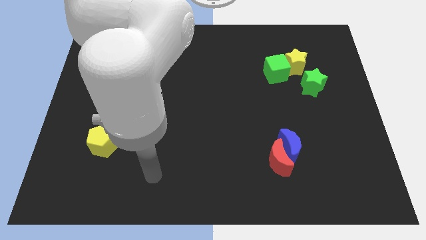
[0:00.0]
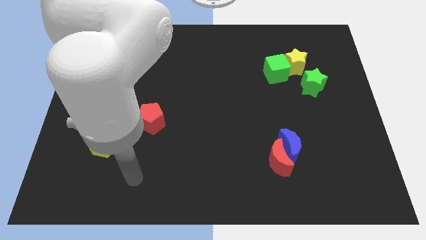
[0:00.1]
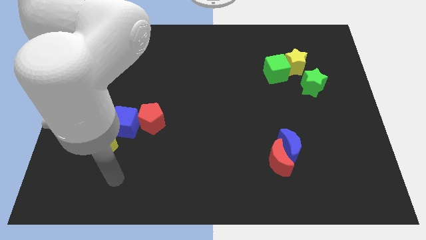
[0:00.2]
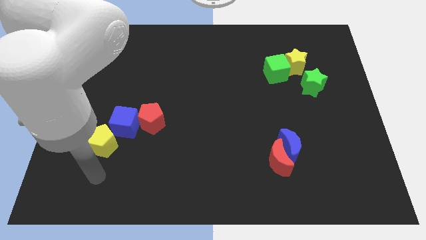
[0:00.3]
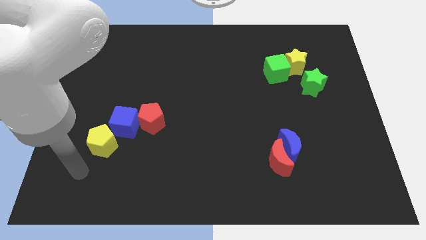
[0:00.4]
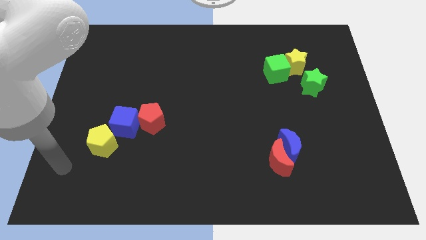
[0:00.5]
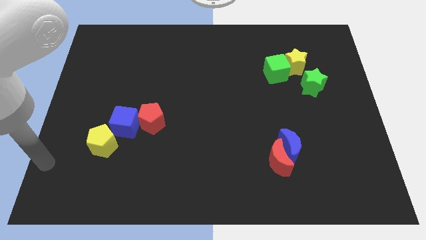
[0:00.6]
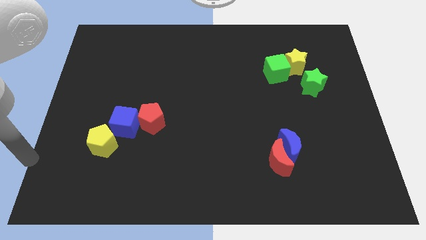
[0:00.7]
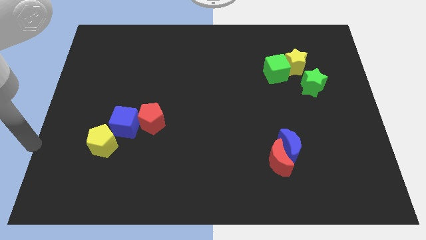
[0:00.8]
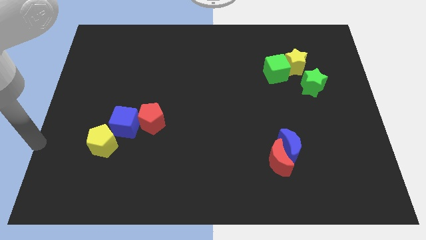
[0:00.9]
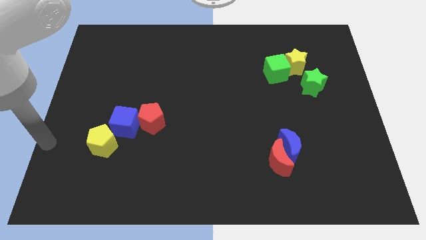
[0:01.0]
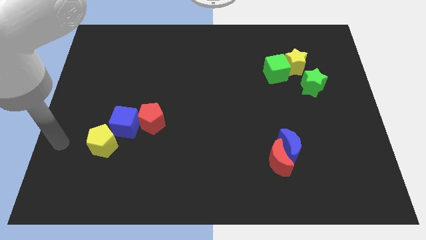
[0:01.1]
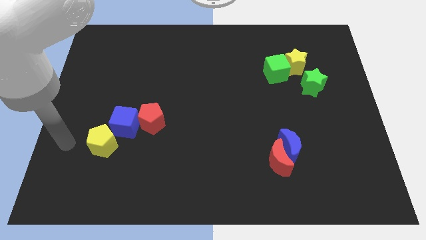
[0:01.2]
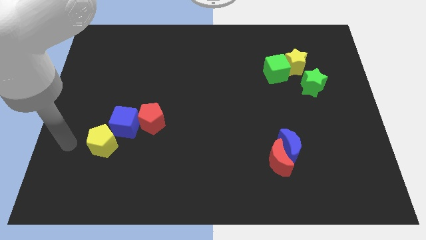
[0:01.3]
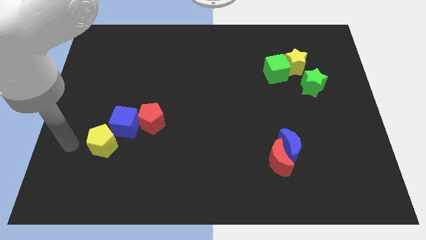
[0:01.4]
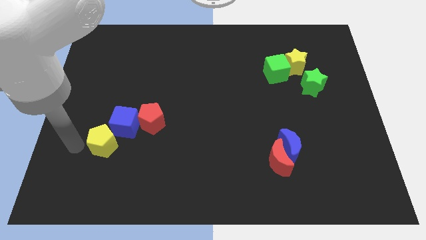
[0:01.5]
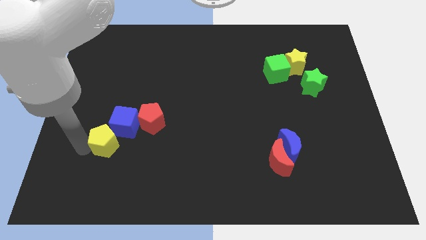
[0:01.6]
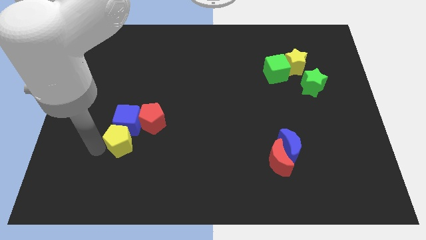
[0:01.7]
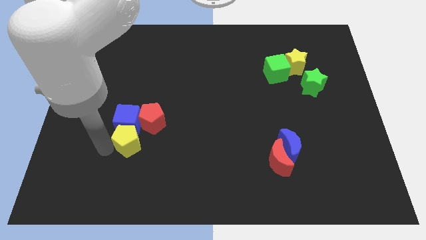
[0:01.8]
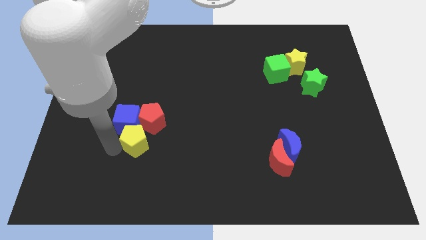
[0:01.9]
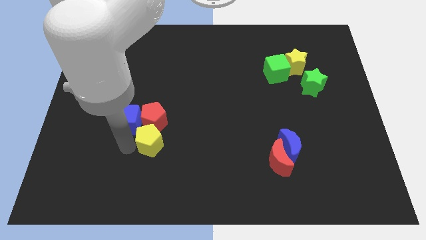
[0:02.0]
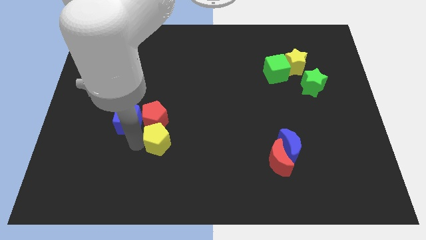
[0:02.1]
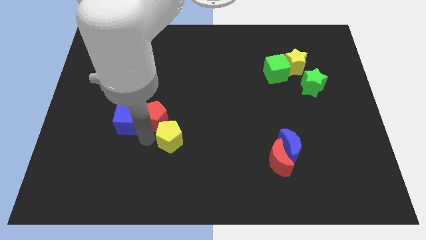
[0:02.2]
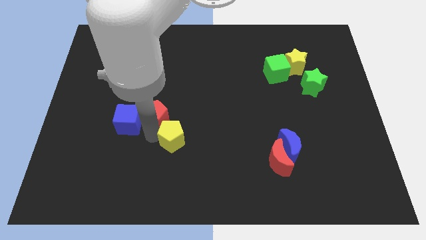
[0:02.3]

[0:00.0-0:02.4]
move the yellow pentagon diagonal below the red pentagon

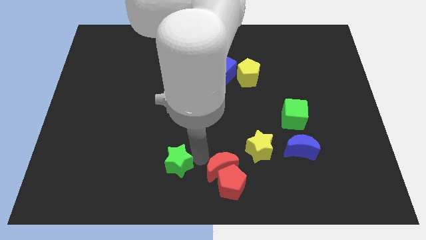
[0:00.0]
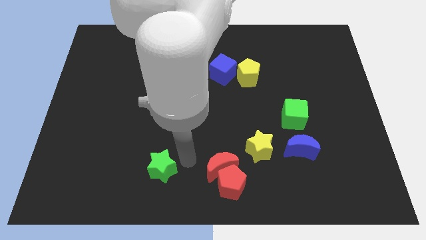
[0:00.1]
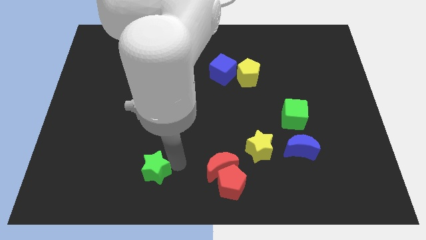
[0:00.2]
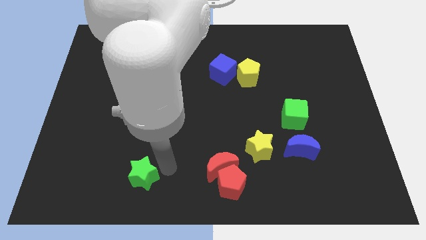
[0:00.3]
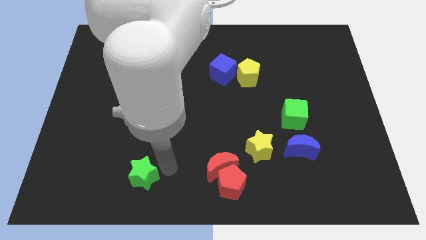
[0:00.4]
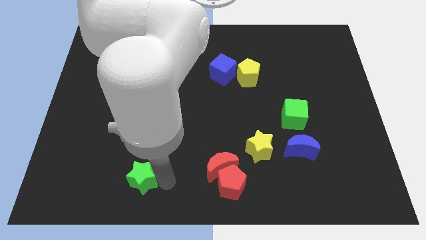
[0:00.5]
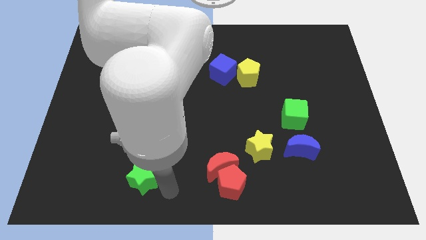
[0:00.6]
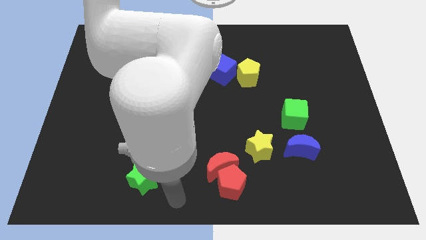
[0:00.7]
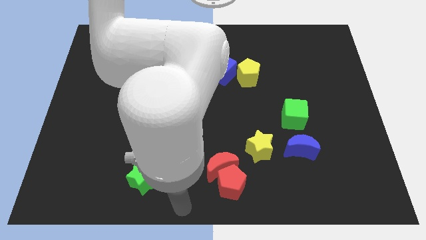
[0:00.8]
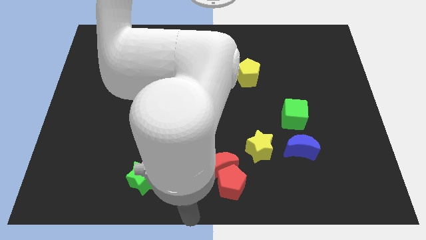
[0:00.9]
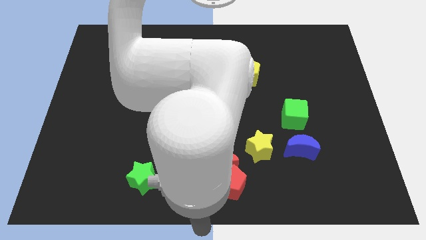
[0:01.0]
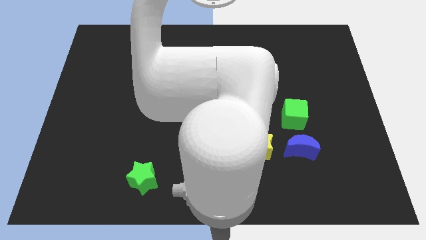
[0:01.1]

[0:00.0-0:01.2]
push the green star slightly to the bottom of the board

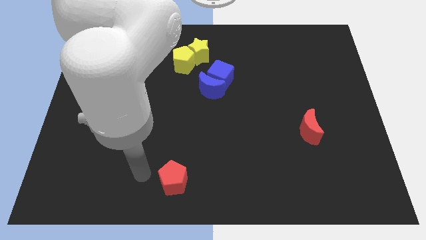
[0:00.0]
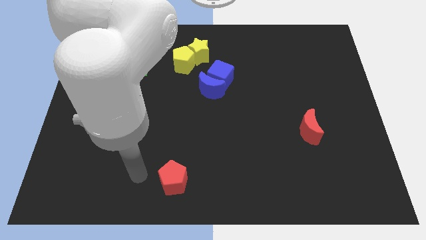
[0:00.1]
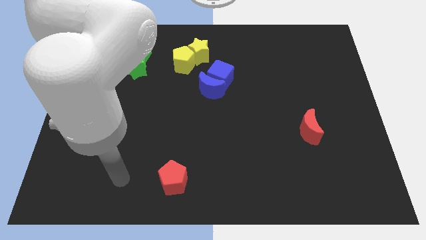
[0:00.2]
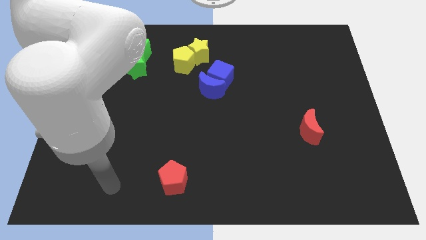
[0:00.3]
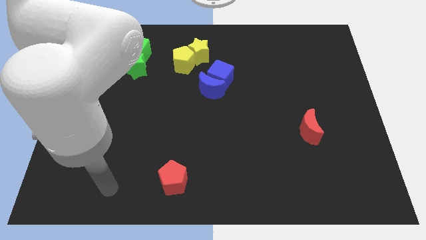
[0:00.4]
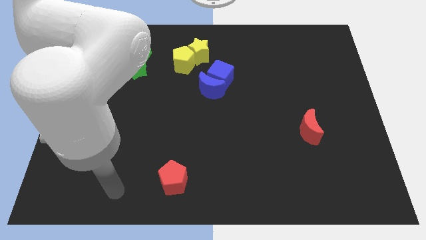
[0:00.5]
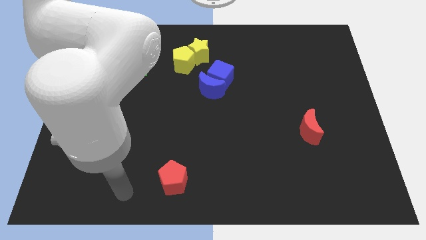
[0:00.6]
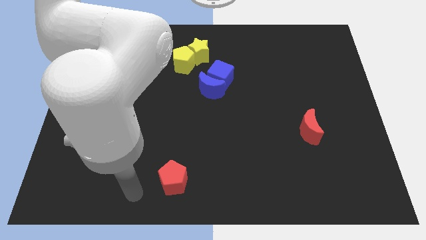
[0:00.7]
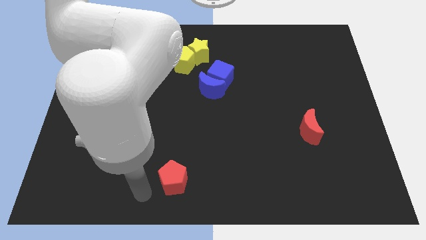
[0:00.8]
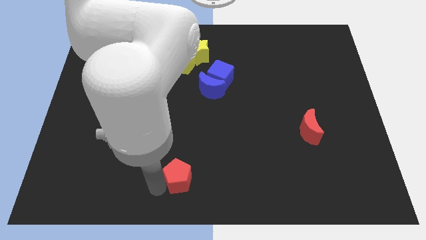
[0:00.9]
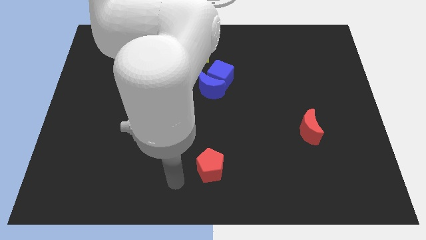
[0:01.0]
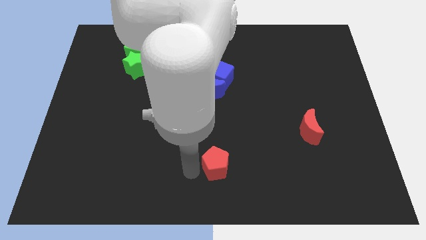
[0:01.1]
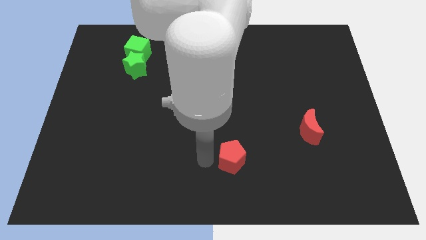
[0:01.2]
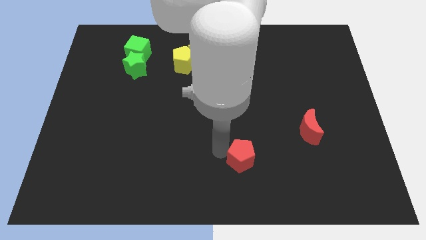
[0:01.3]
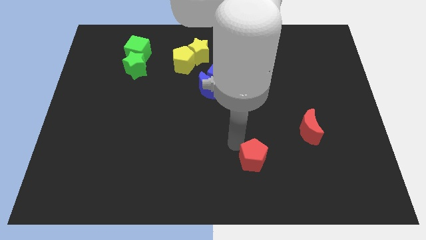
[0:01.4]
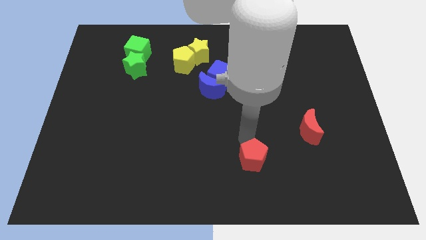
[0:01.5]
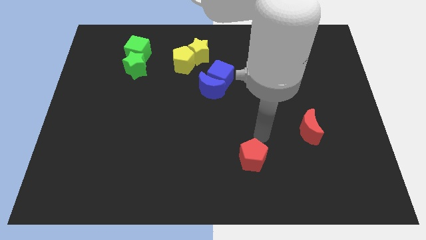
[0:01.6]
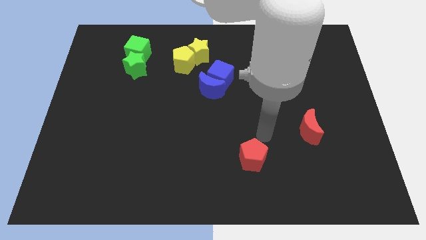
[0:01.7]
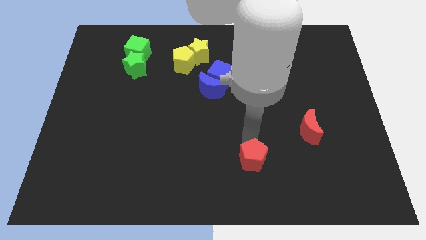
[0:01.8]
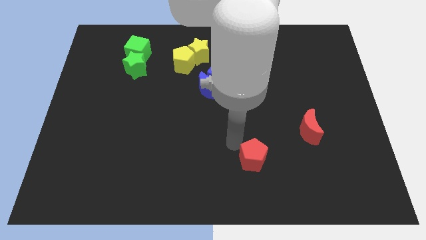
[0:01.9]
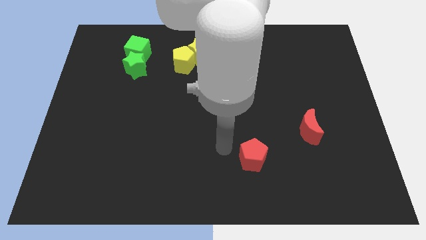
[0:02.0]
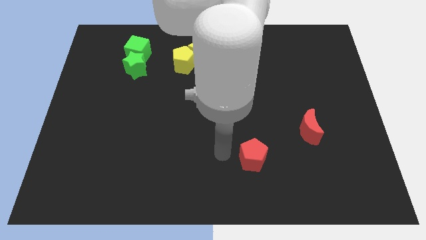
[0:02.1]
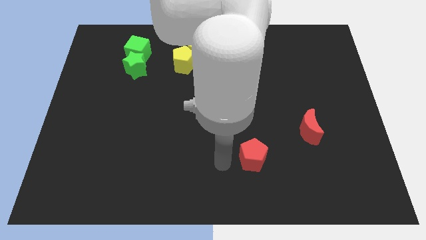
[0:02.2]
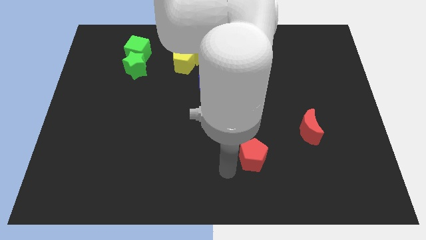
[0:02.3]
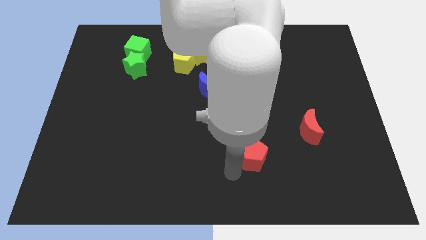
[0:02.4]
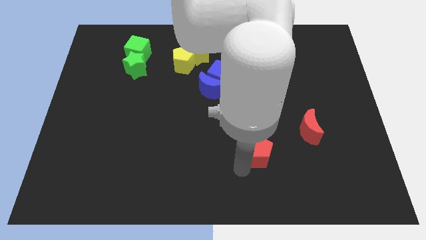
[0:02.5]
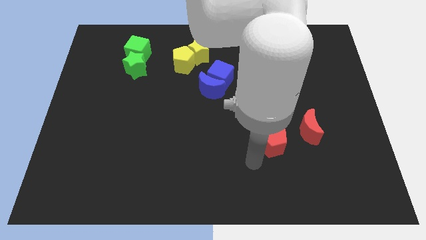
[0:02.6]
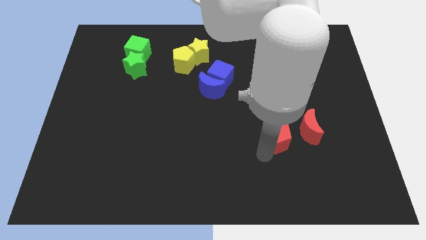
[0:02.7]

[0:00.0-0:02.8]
move red pentagon parallel to red moon

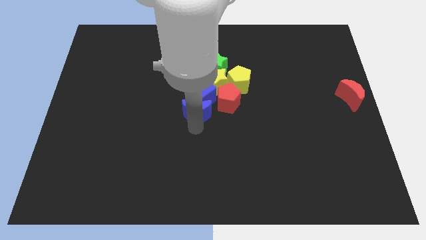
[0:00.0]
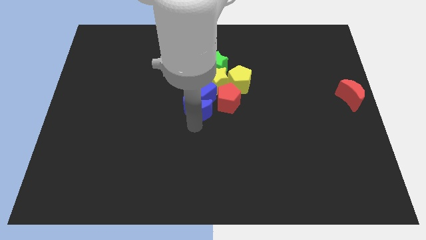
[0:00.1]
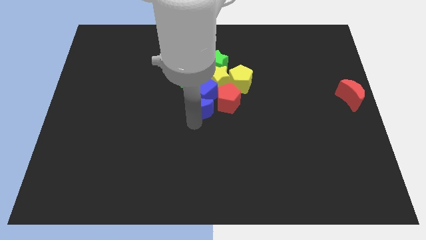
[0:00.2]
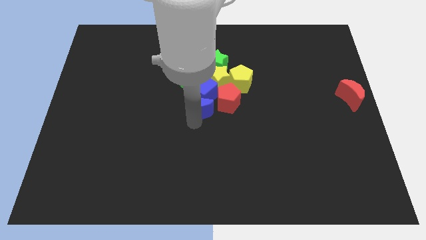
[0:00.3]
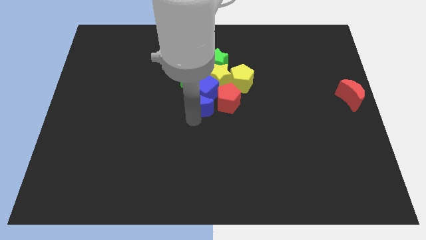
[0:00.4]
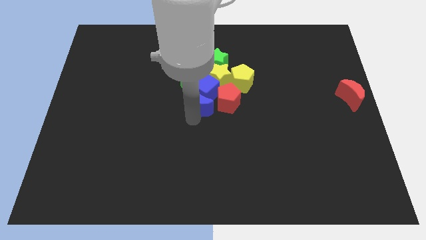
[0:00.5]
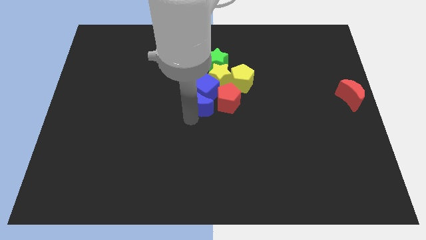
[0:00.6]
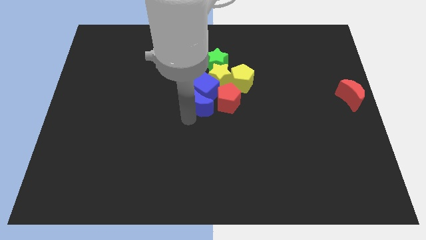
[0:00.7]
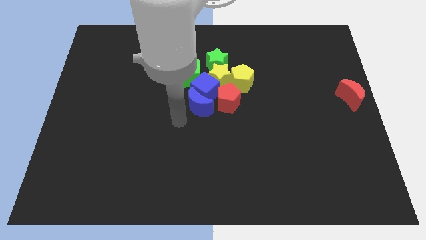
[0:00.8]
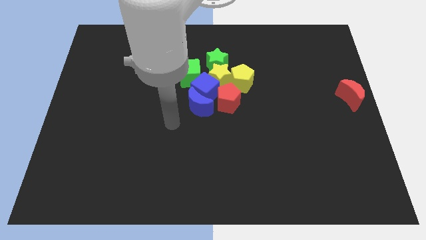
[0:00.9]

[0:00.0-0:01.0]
place blue moon to the left of red pentagon

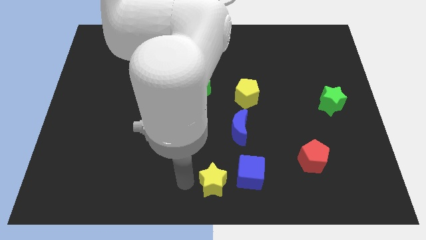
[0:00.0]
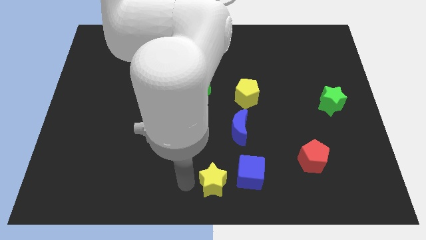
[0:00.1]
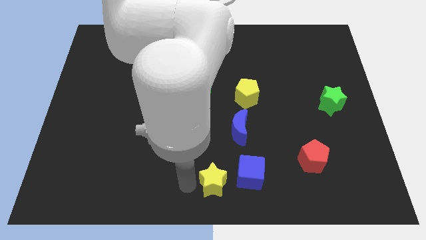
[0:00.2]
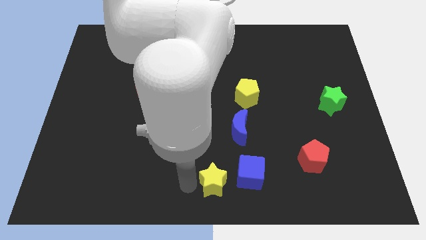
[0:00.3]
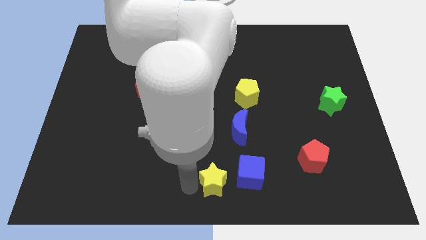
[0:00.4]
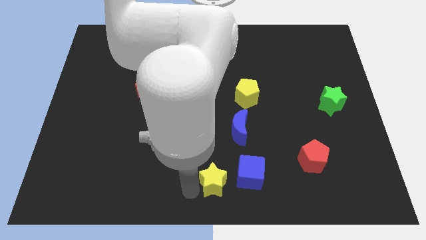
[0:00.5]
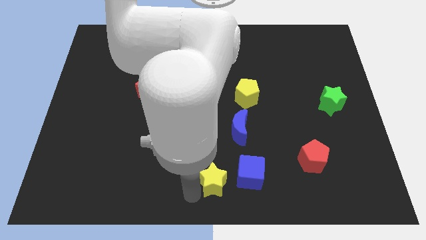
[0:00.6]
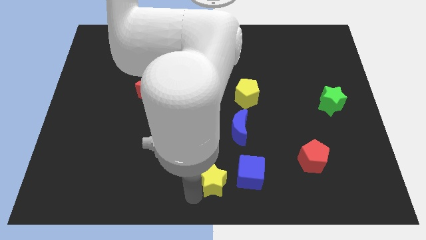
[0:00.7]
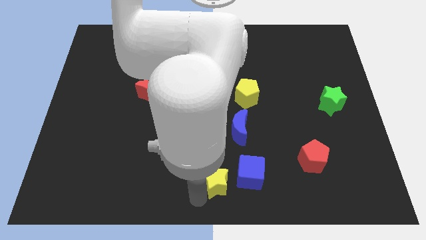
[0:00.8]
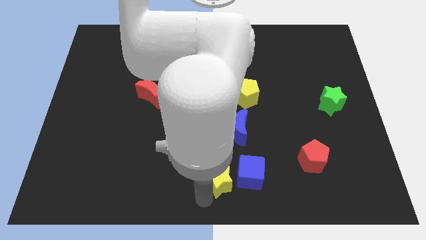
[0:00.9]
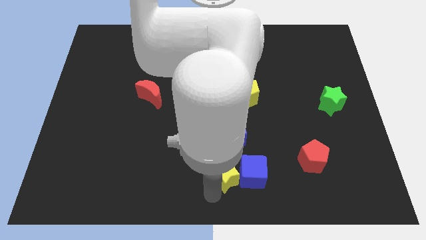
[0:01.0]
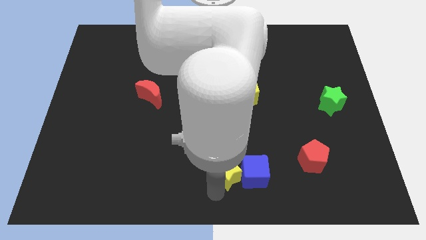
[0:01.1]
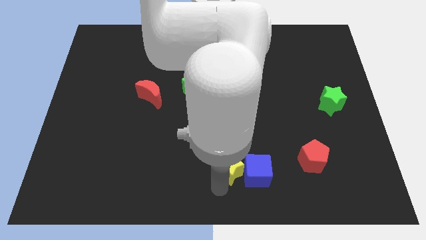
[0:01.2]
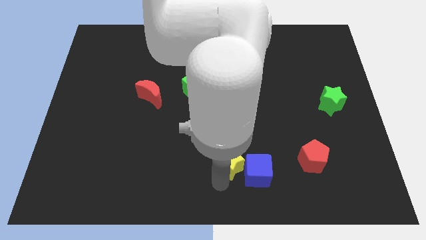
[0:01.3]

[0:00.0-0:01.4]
push the yellow star into the blue cube
